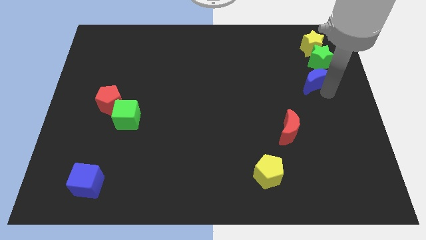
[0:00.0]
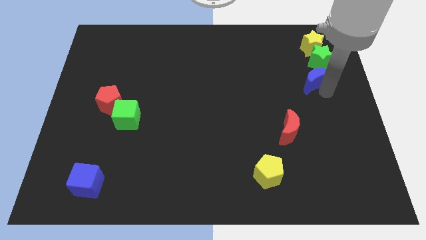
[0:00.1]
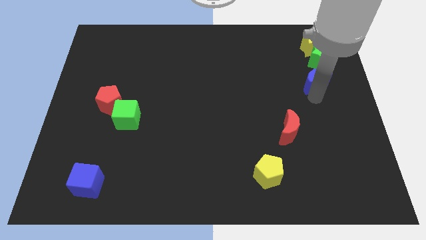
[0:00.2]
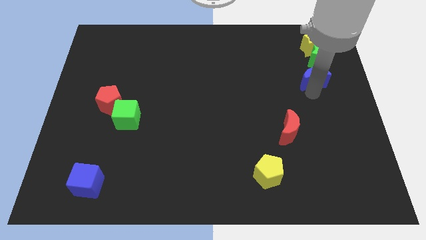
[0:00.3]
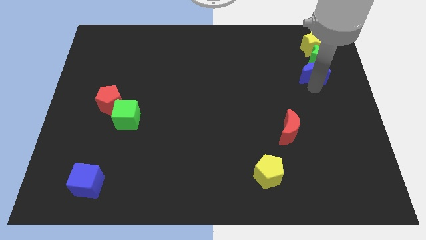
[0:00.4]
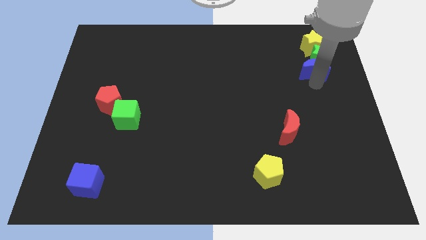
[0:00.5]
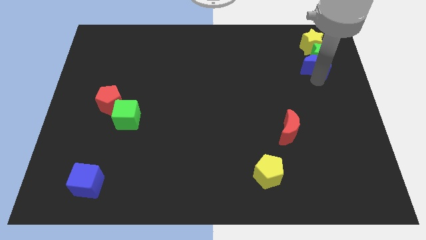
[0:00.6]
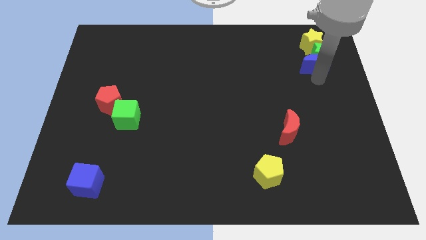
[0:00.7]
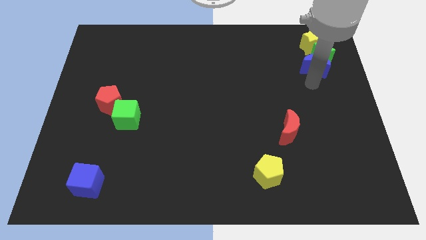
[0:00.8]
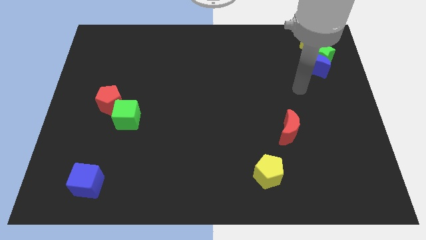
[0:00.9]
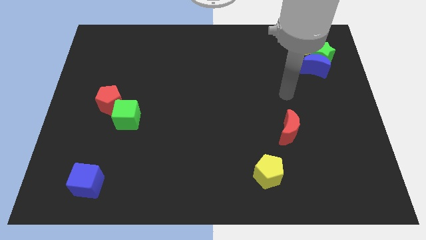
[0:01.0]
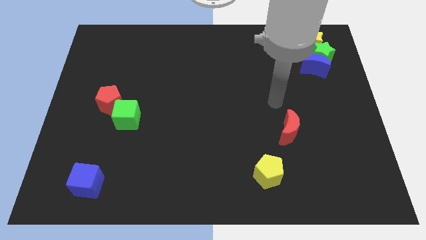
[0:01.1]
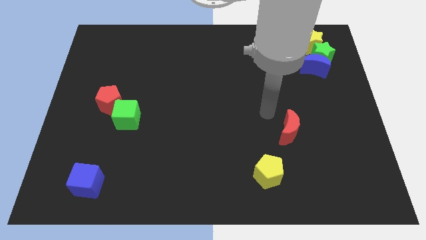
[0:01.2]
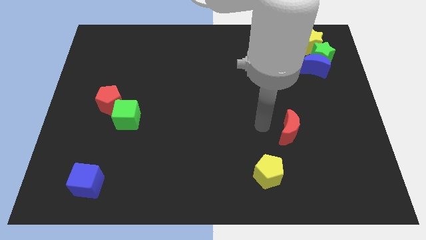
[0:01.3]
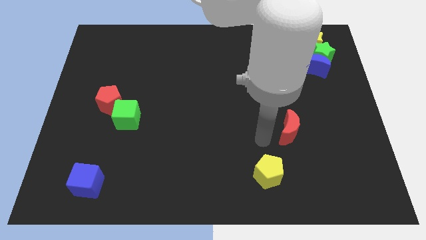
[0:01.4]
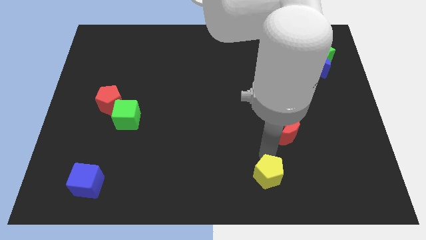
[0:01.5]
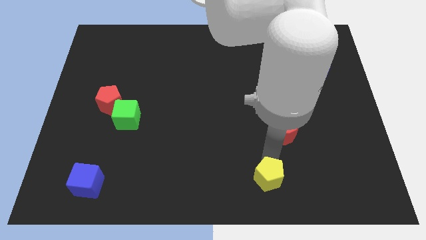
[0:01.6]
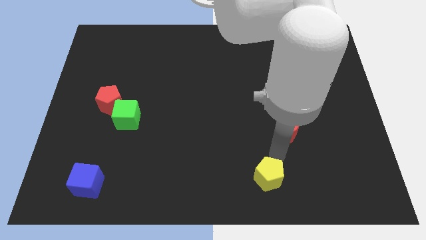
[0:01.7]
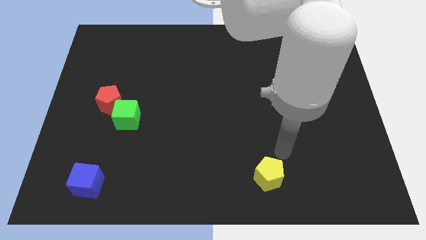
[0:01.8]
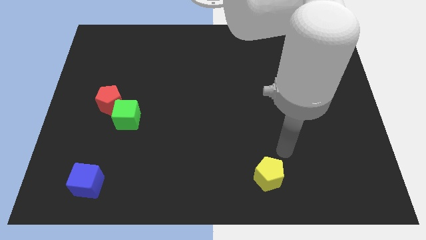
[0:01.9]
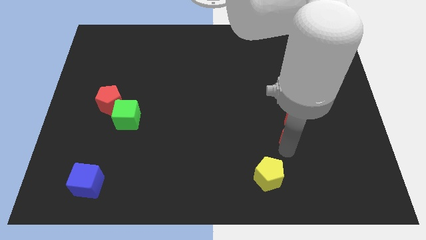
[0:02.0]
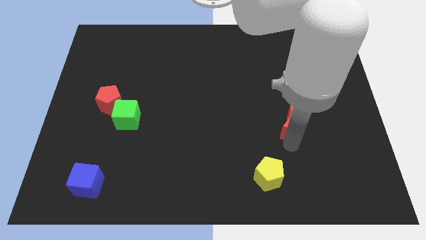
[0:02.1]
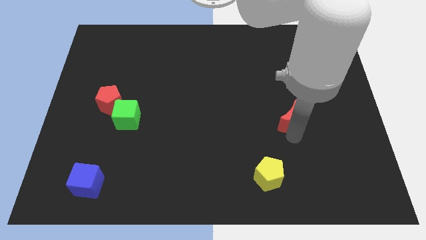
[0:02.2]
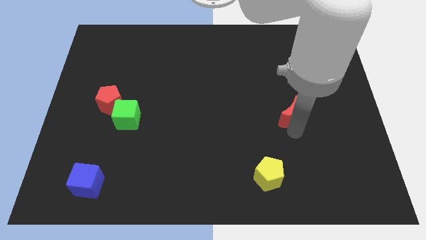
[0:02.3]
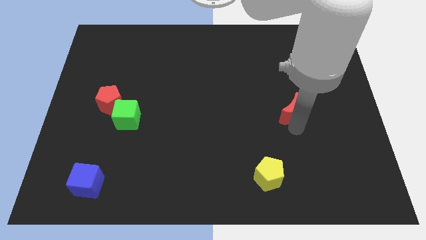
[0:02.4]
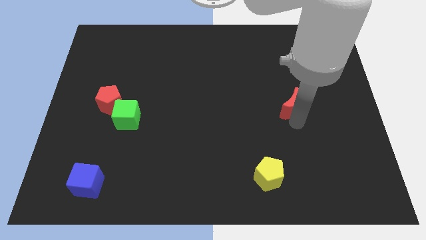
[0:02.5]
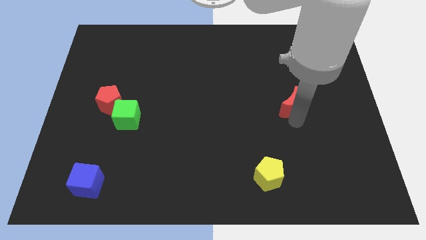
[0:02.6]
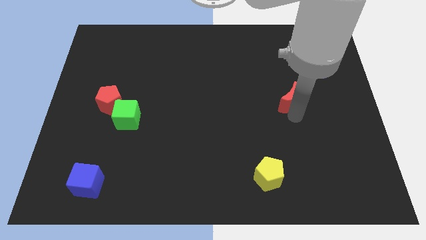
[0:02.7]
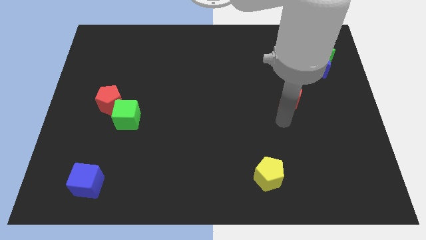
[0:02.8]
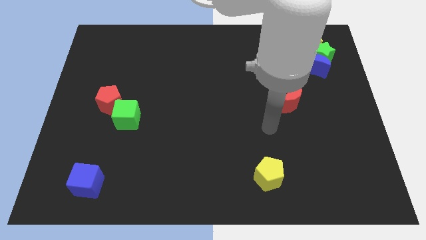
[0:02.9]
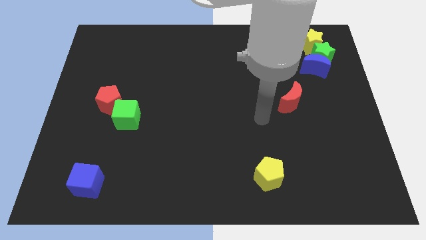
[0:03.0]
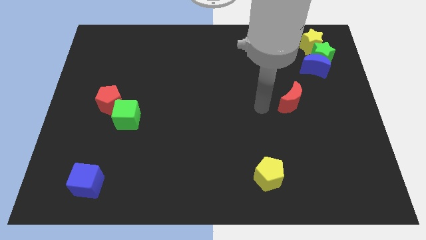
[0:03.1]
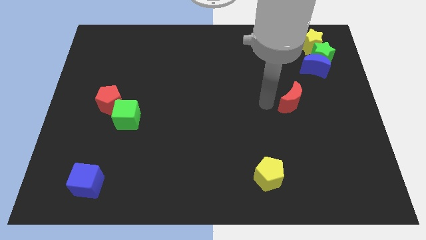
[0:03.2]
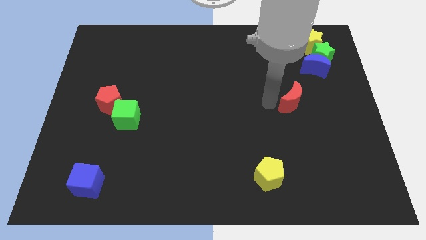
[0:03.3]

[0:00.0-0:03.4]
move your arm away form the blue crescent

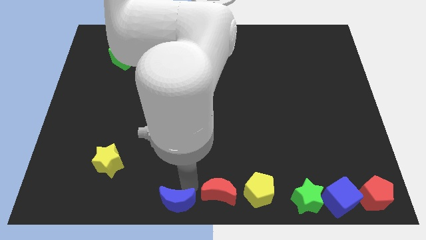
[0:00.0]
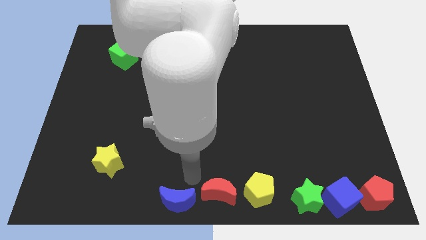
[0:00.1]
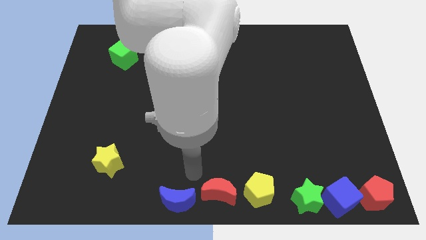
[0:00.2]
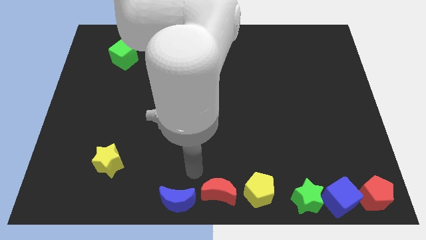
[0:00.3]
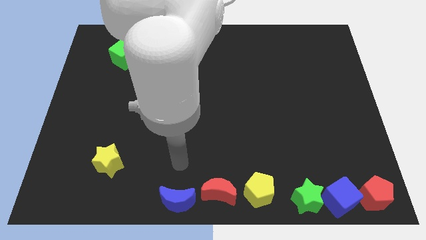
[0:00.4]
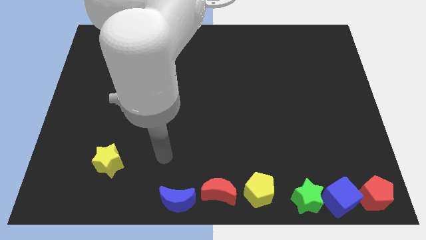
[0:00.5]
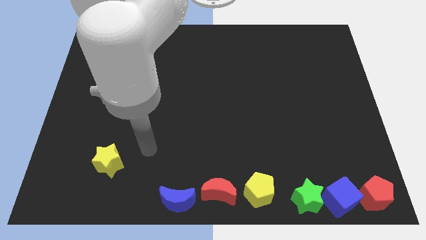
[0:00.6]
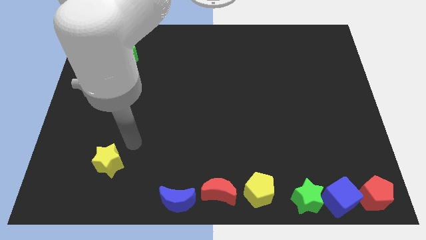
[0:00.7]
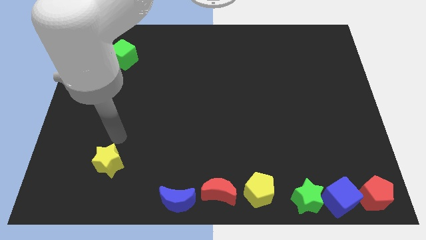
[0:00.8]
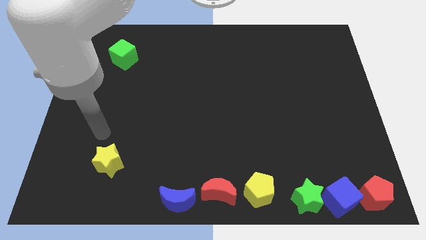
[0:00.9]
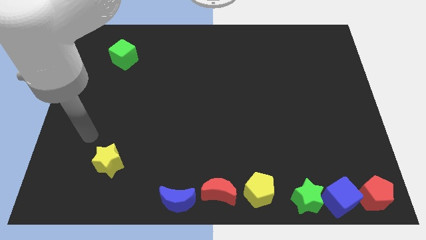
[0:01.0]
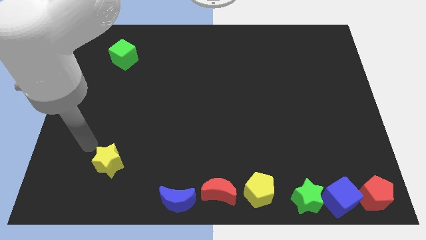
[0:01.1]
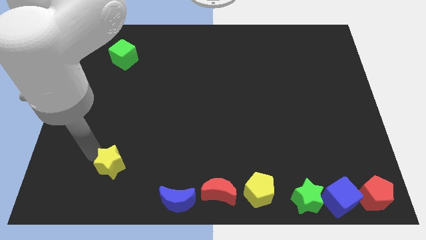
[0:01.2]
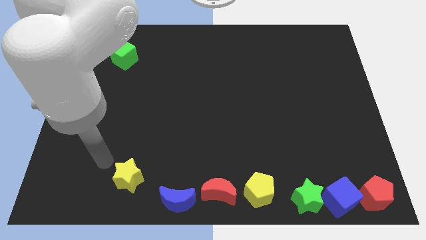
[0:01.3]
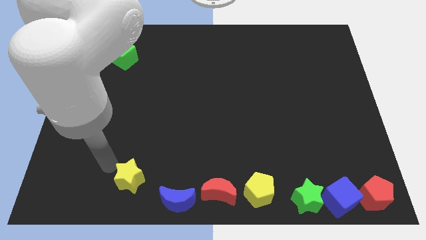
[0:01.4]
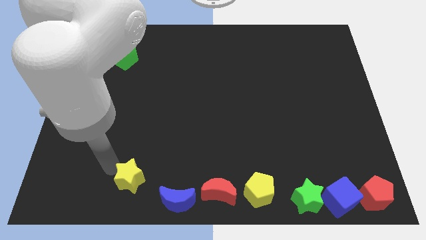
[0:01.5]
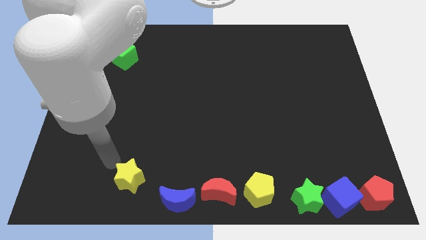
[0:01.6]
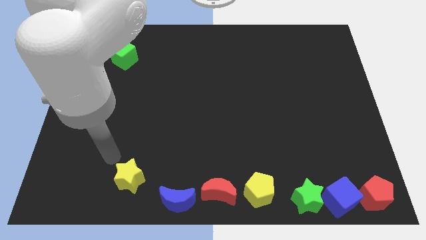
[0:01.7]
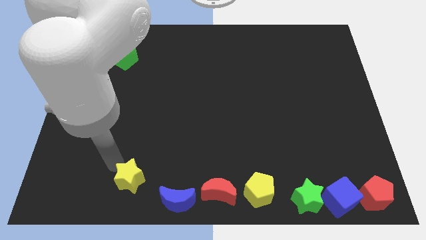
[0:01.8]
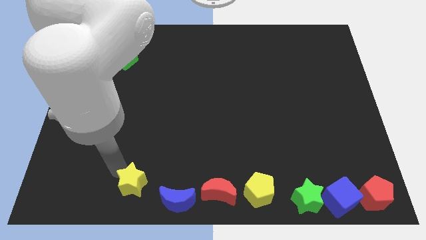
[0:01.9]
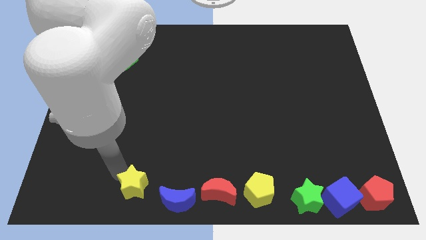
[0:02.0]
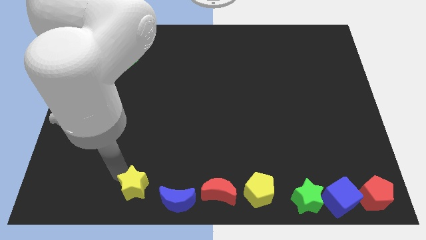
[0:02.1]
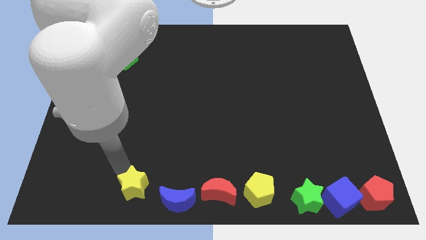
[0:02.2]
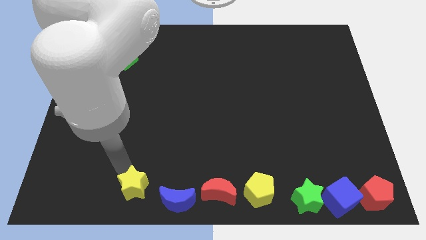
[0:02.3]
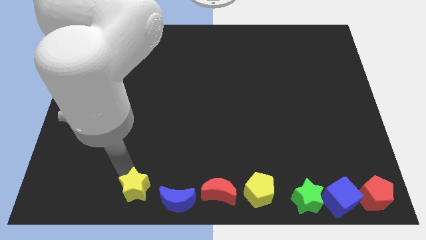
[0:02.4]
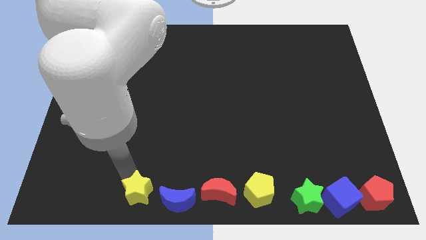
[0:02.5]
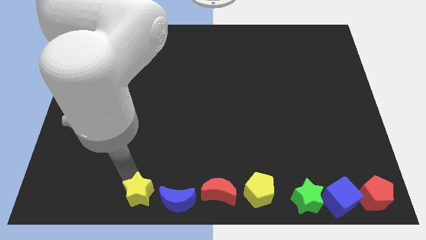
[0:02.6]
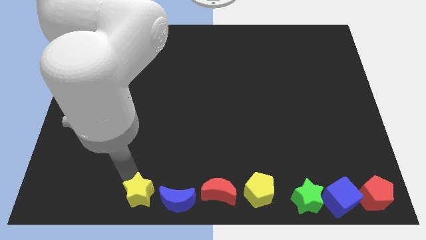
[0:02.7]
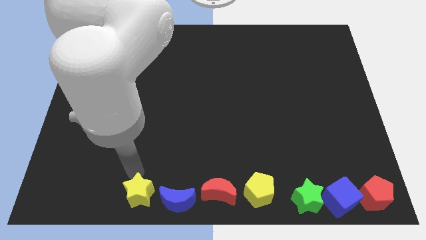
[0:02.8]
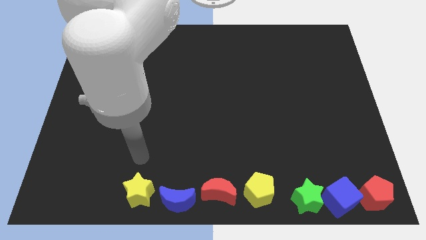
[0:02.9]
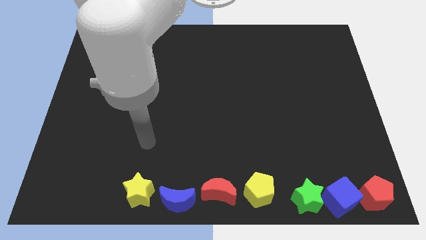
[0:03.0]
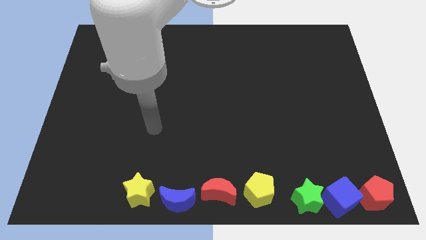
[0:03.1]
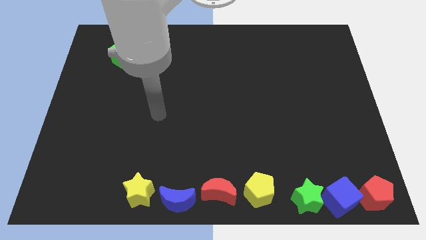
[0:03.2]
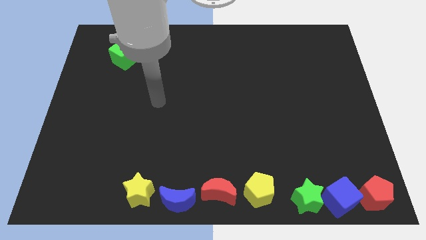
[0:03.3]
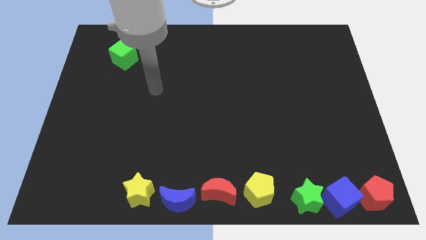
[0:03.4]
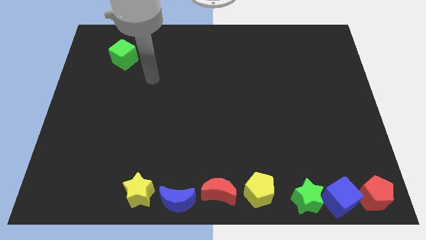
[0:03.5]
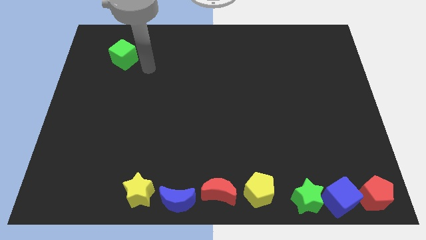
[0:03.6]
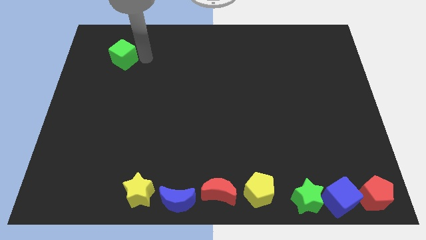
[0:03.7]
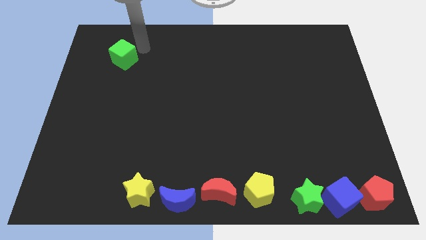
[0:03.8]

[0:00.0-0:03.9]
push the yellow star to the left side of the blue crescent

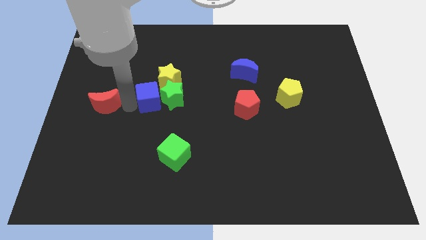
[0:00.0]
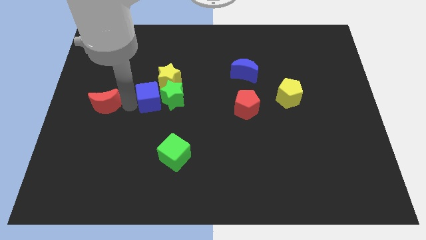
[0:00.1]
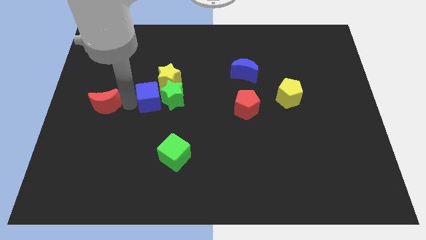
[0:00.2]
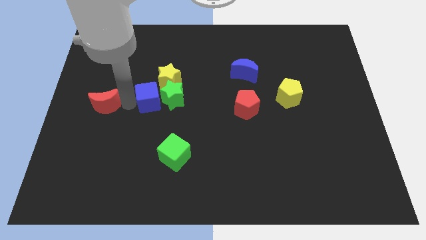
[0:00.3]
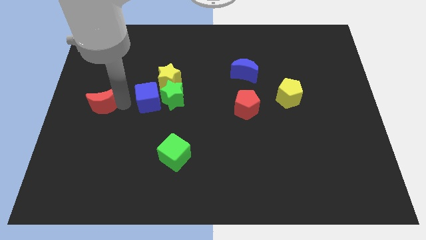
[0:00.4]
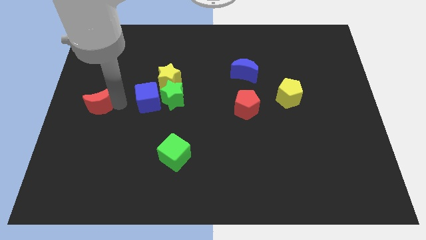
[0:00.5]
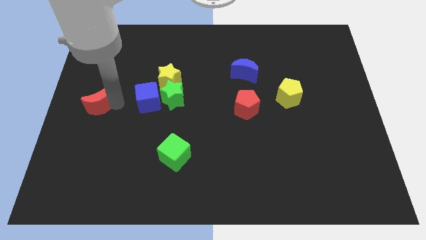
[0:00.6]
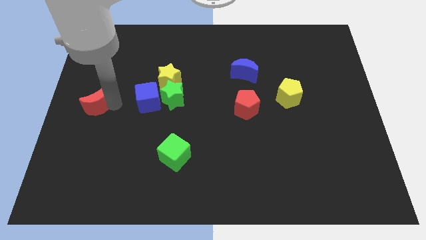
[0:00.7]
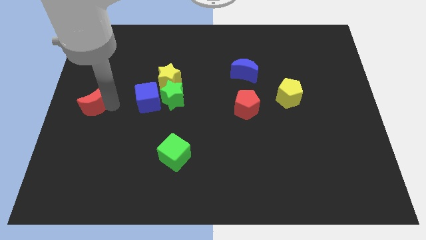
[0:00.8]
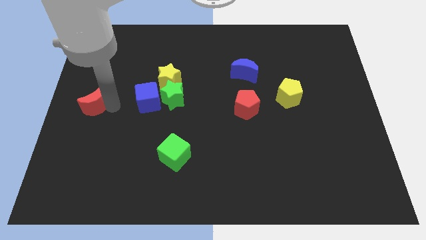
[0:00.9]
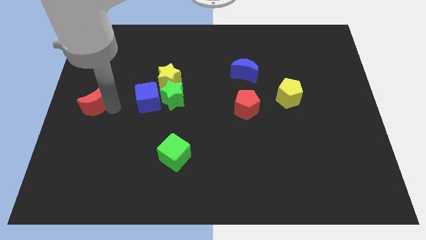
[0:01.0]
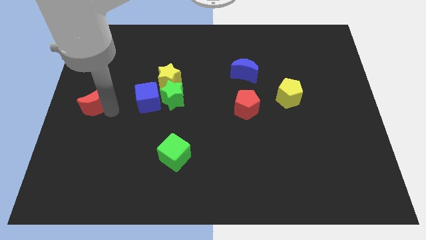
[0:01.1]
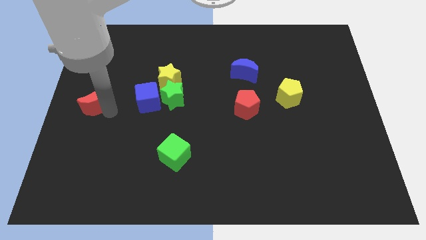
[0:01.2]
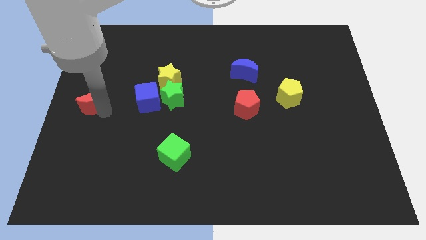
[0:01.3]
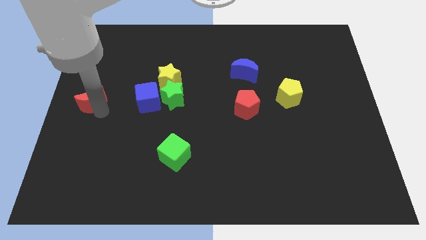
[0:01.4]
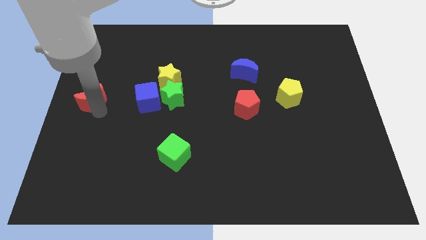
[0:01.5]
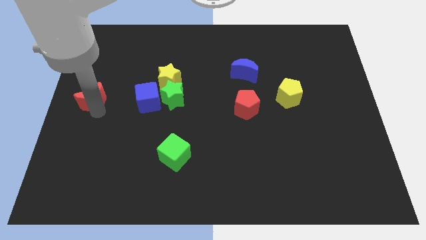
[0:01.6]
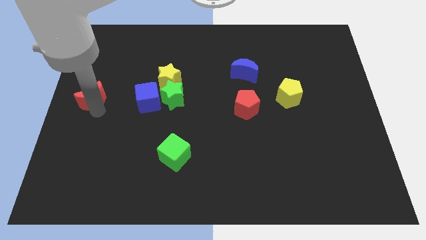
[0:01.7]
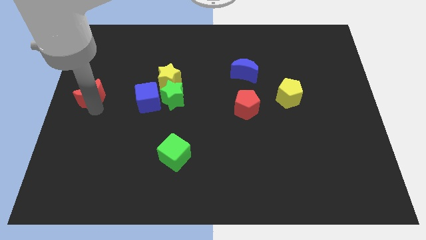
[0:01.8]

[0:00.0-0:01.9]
place the red crescent at the left centre of the board
